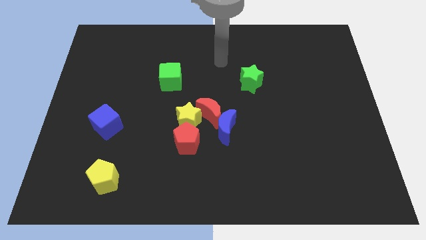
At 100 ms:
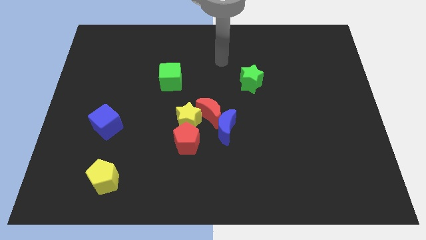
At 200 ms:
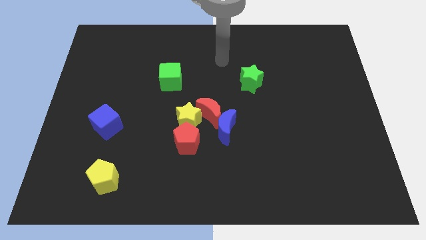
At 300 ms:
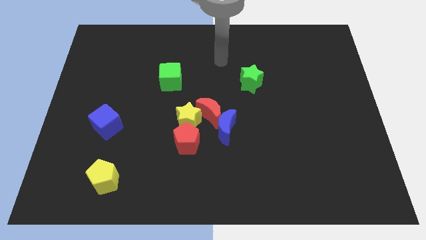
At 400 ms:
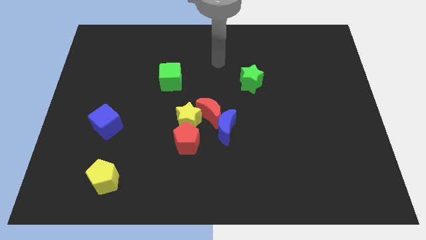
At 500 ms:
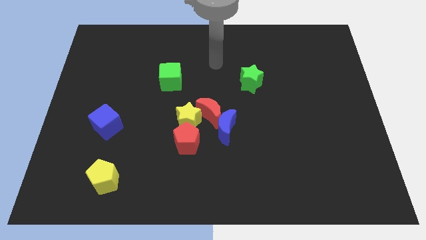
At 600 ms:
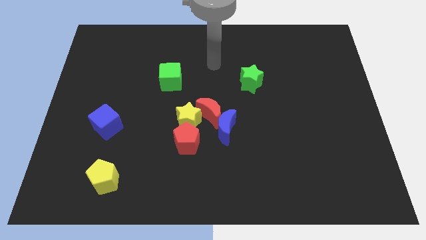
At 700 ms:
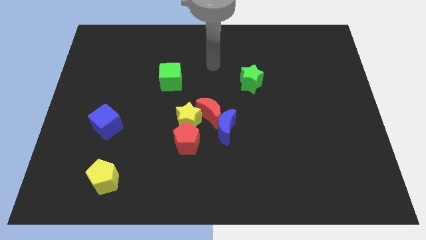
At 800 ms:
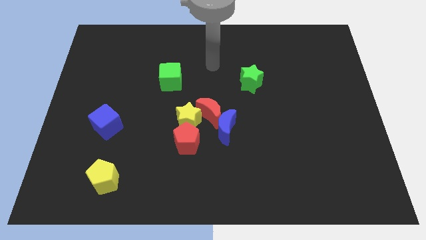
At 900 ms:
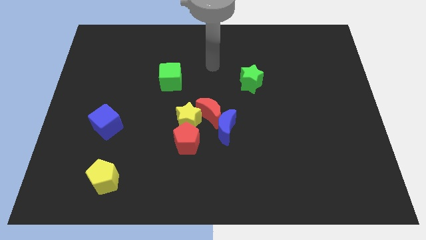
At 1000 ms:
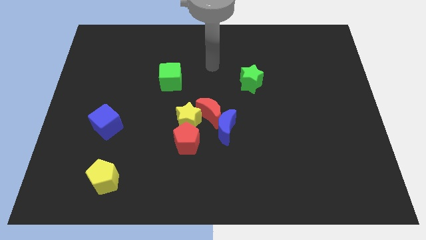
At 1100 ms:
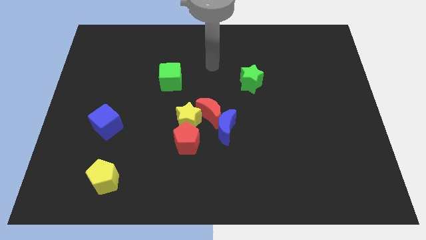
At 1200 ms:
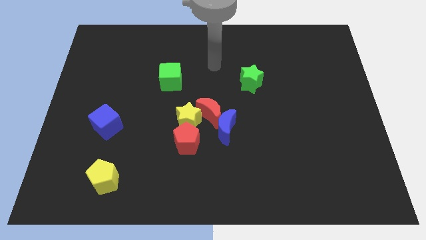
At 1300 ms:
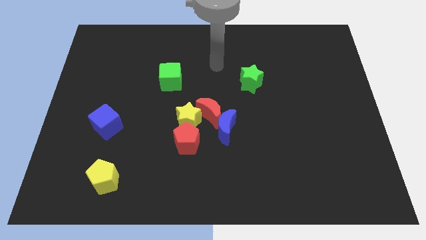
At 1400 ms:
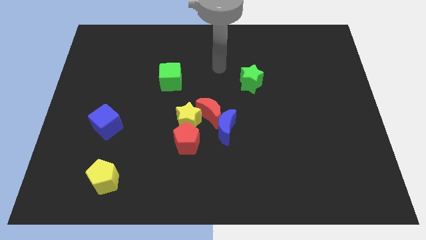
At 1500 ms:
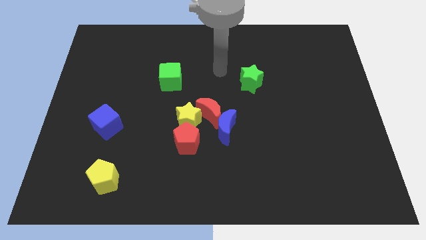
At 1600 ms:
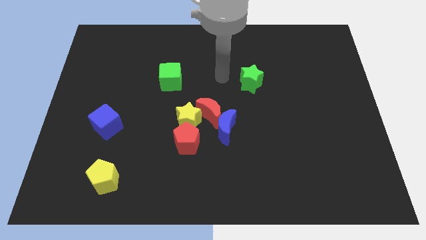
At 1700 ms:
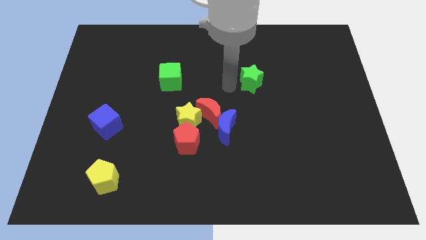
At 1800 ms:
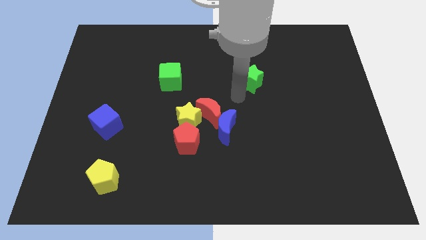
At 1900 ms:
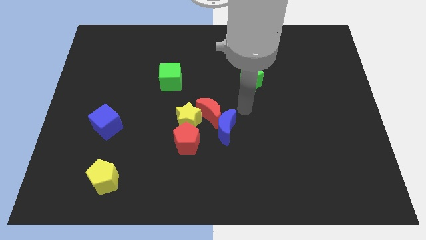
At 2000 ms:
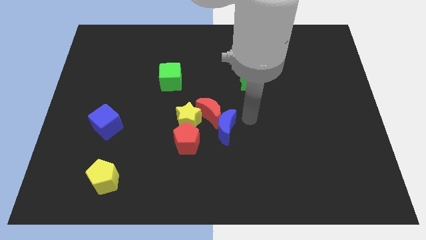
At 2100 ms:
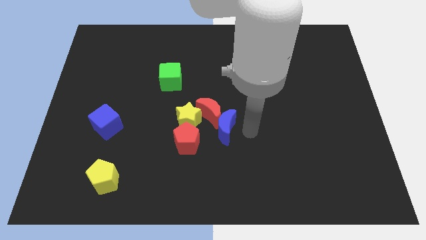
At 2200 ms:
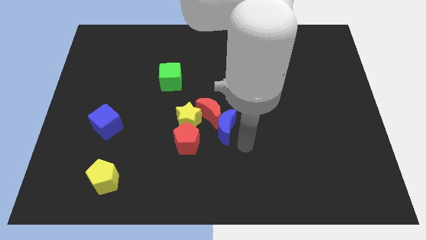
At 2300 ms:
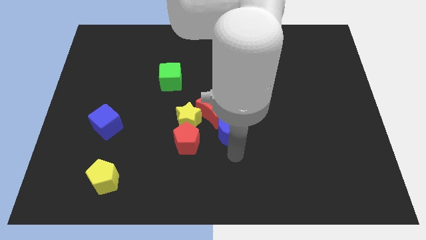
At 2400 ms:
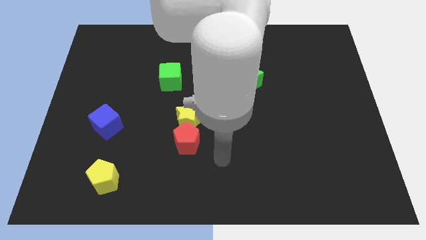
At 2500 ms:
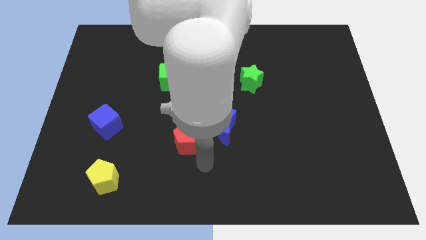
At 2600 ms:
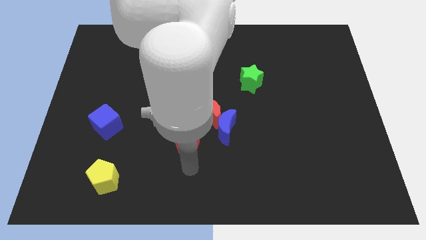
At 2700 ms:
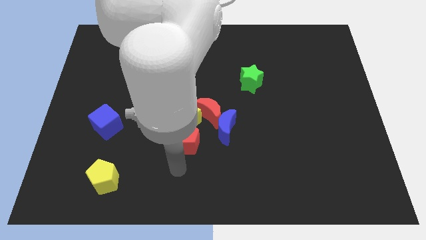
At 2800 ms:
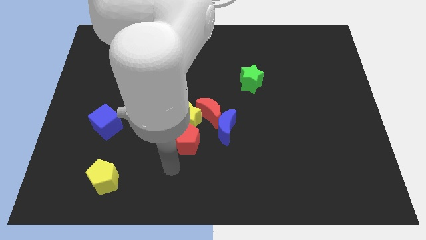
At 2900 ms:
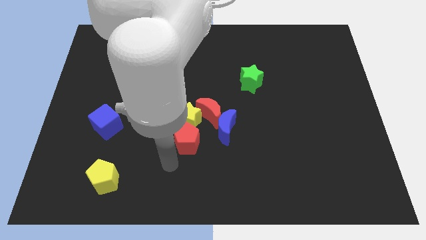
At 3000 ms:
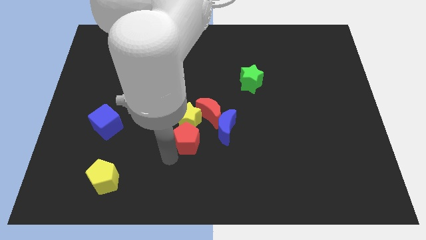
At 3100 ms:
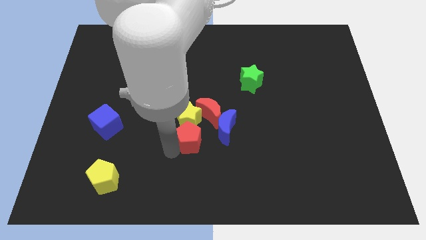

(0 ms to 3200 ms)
put your hand at the bottom left side of the red pentagon

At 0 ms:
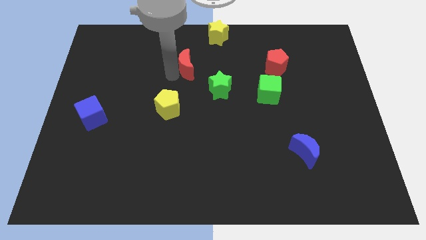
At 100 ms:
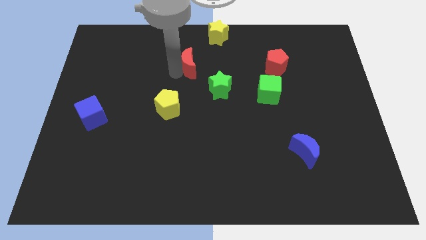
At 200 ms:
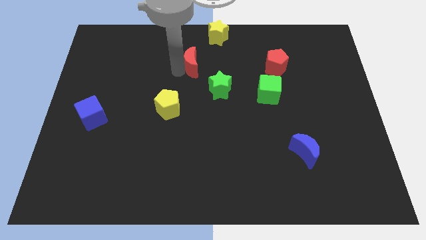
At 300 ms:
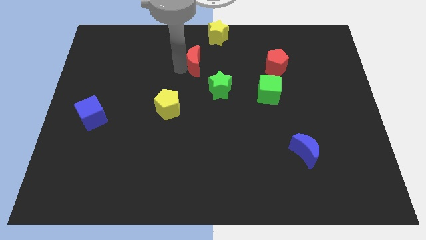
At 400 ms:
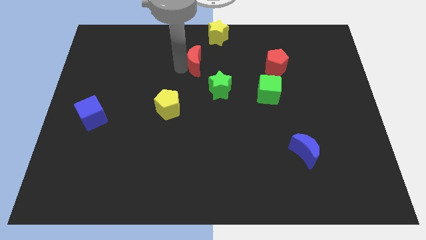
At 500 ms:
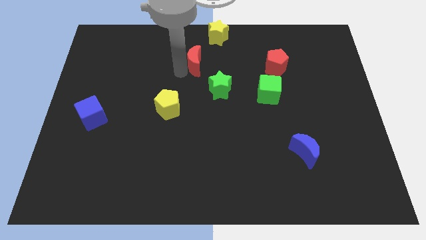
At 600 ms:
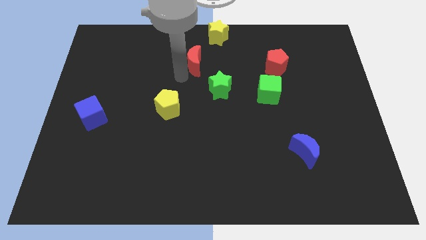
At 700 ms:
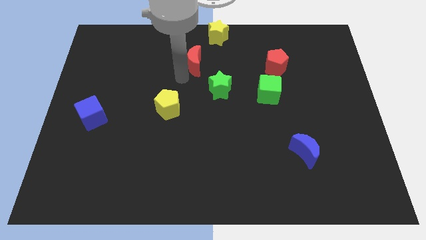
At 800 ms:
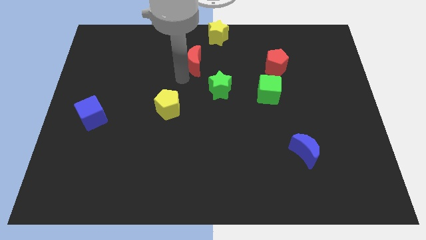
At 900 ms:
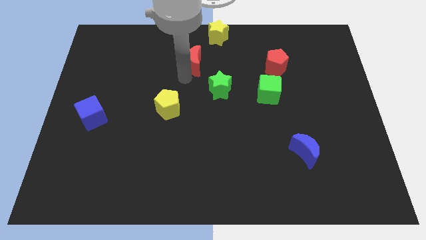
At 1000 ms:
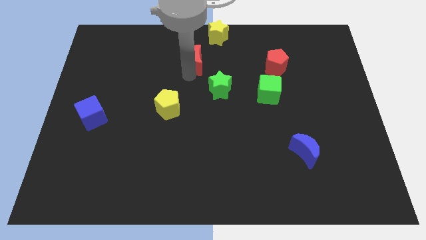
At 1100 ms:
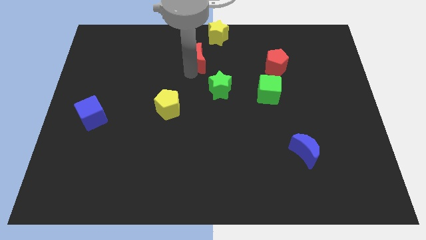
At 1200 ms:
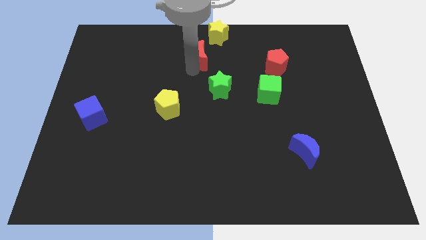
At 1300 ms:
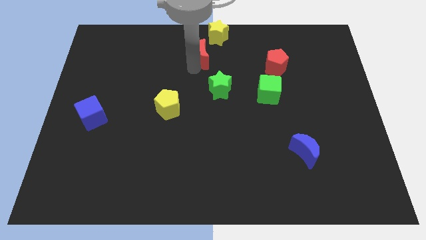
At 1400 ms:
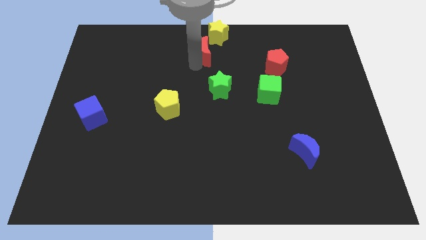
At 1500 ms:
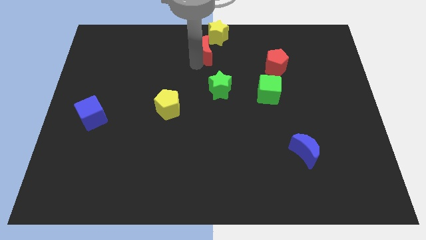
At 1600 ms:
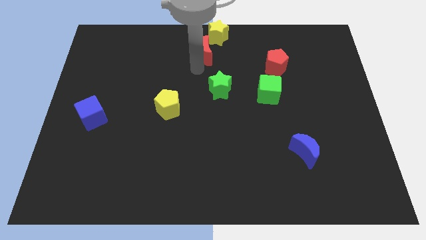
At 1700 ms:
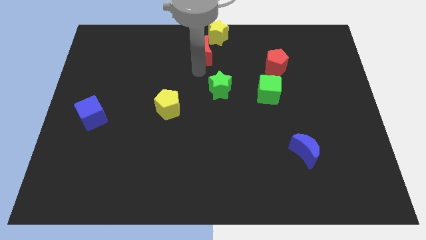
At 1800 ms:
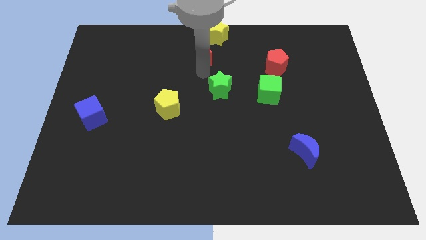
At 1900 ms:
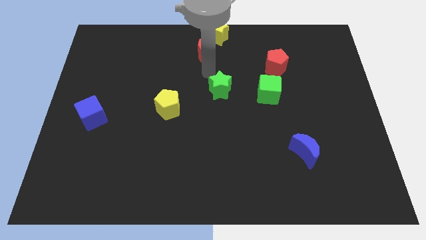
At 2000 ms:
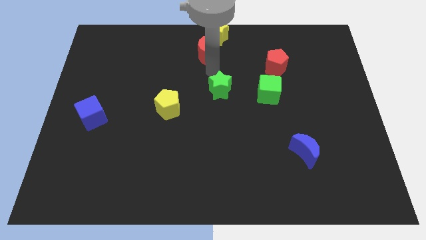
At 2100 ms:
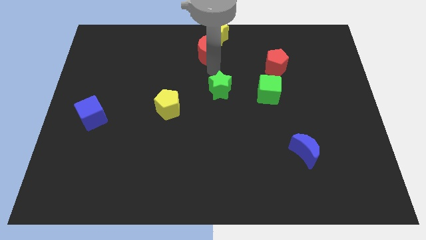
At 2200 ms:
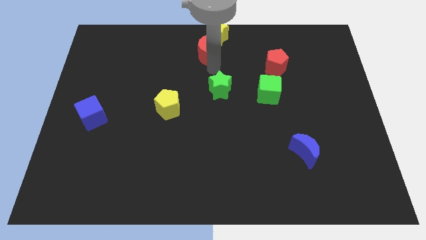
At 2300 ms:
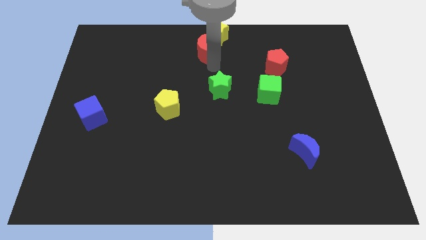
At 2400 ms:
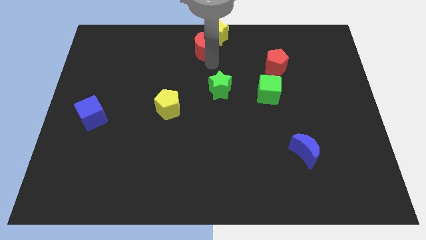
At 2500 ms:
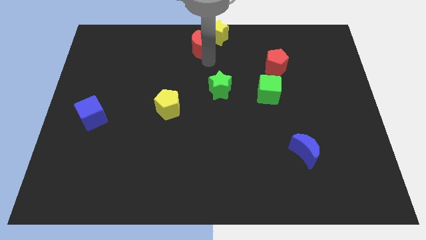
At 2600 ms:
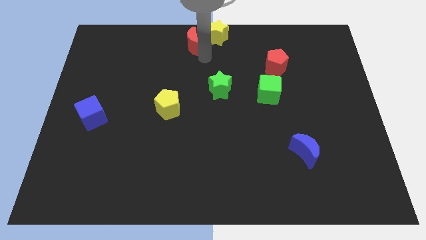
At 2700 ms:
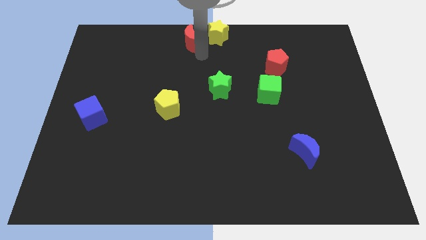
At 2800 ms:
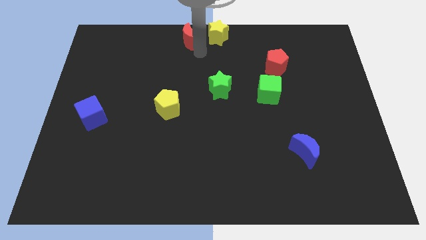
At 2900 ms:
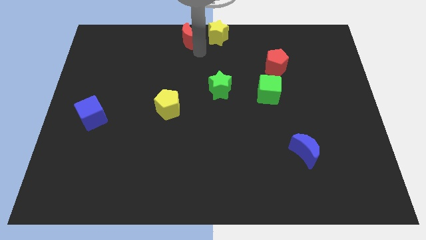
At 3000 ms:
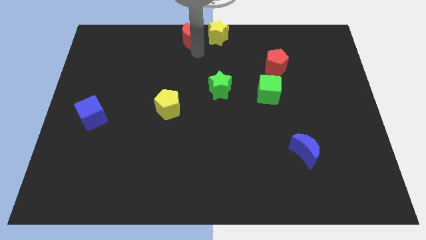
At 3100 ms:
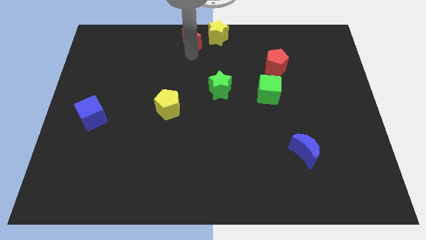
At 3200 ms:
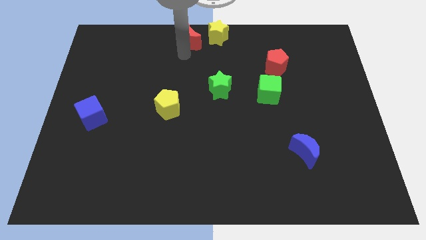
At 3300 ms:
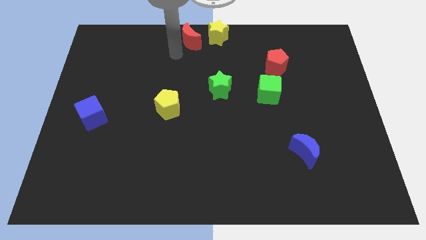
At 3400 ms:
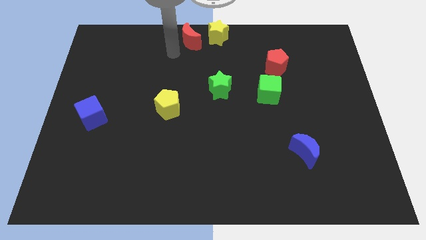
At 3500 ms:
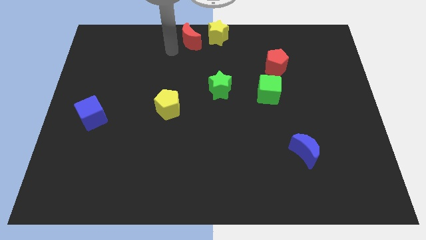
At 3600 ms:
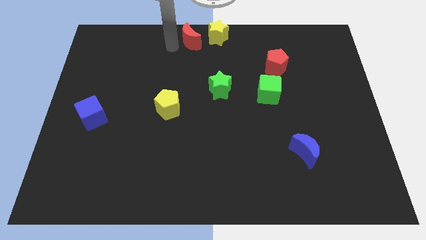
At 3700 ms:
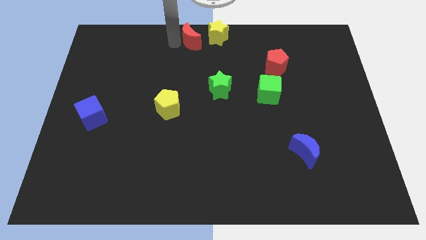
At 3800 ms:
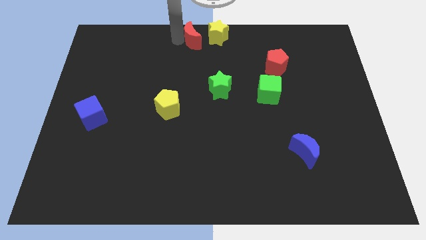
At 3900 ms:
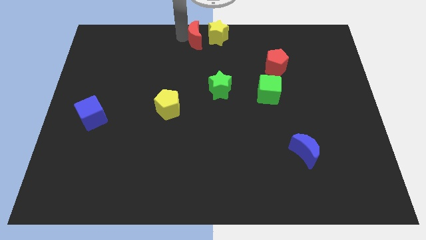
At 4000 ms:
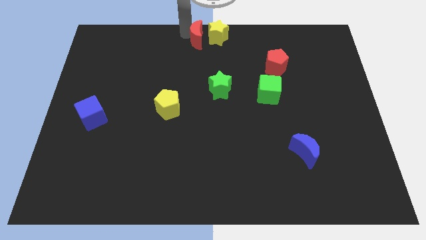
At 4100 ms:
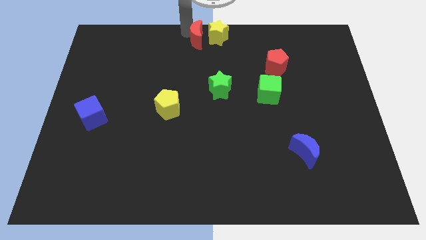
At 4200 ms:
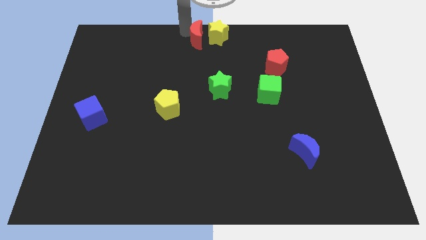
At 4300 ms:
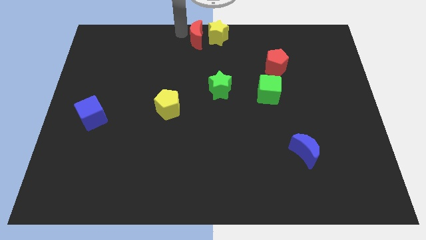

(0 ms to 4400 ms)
place red moon left to yellow pentagon

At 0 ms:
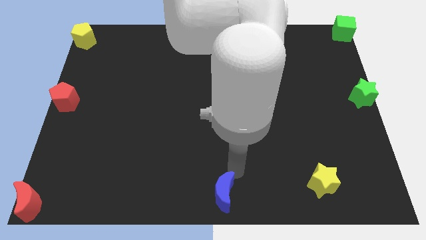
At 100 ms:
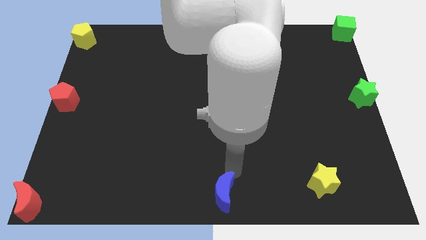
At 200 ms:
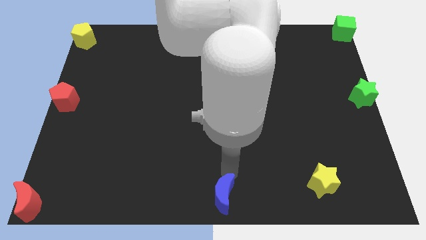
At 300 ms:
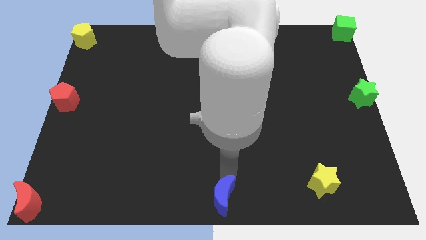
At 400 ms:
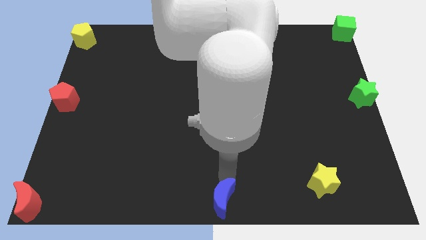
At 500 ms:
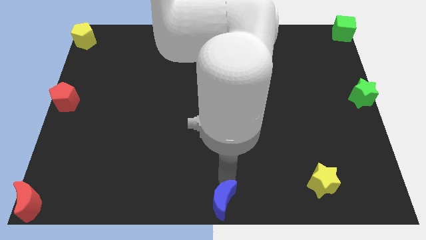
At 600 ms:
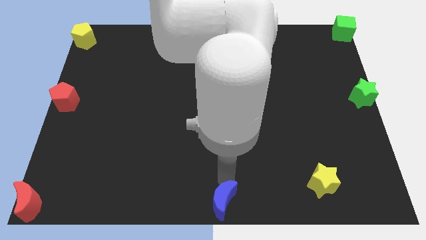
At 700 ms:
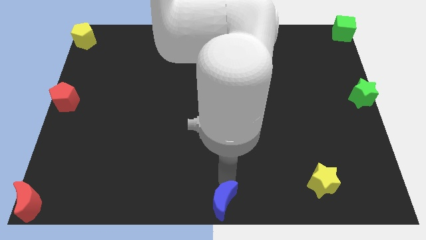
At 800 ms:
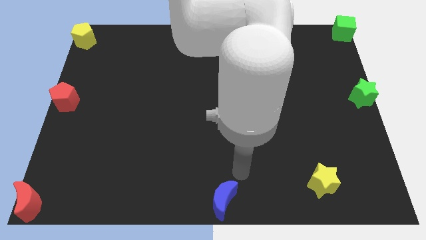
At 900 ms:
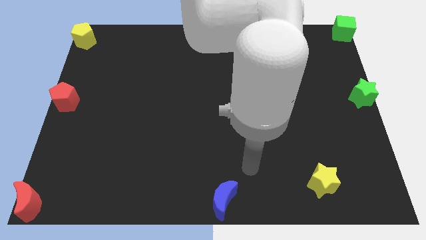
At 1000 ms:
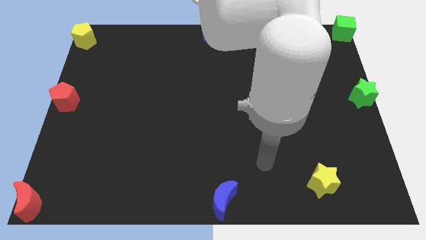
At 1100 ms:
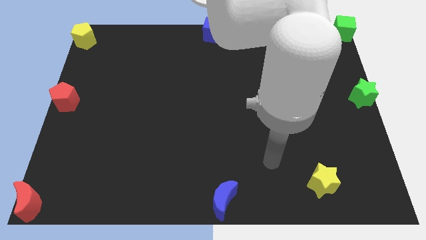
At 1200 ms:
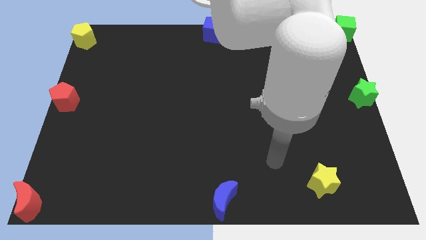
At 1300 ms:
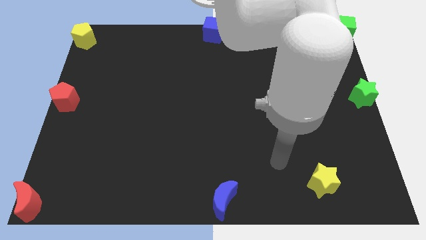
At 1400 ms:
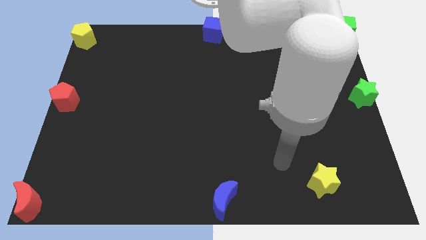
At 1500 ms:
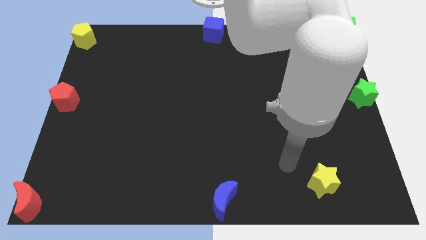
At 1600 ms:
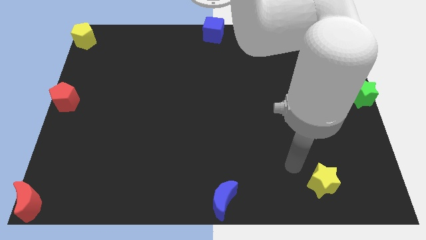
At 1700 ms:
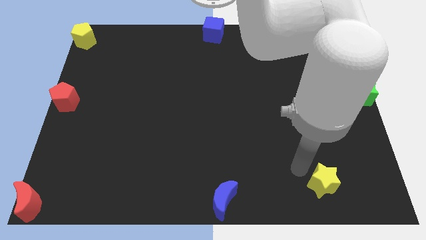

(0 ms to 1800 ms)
place blue crescent at the bottom
